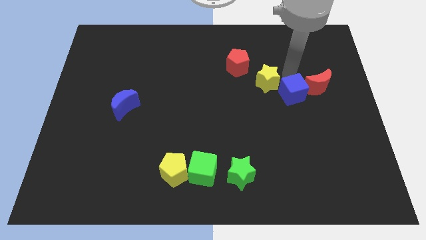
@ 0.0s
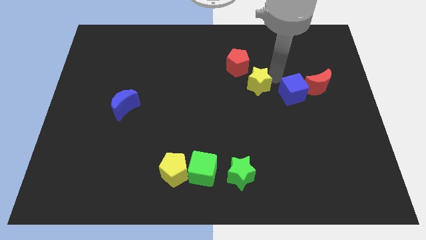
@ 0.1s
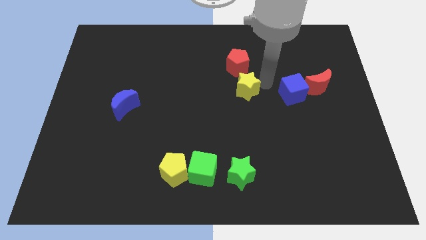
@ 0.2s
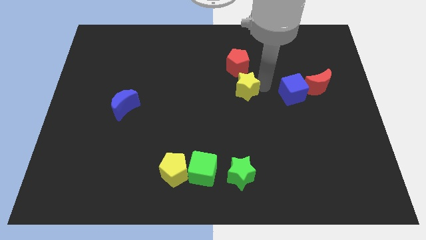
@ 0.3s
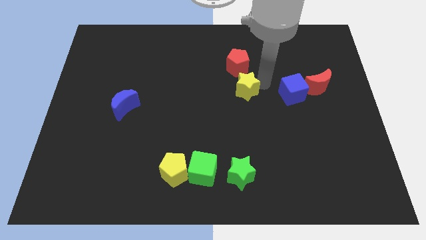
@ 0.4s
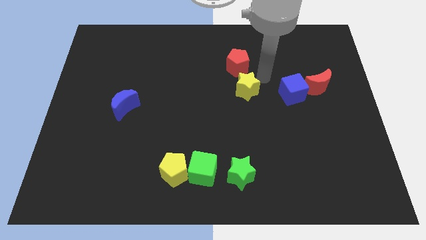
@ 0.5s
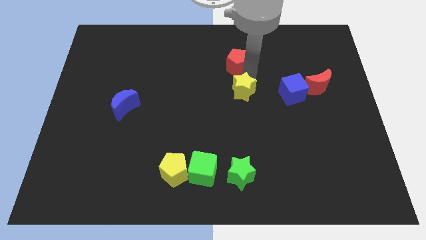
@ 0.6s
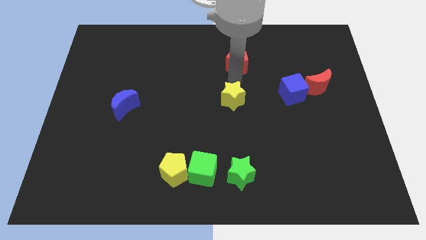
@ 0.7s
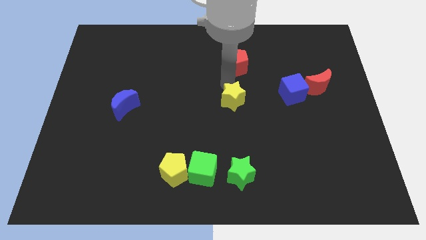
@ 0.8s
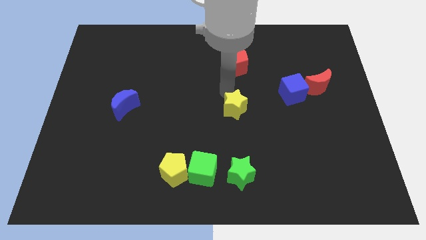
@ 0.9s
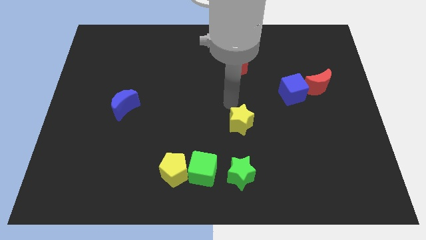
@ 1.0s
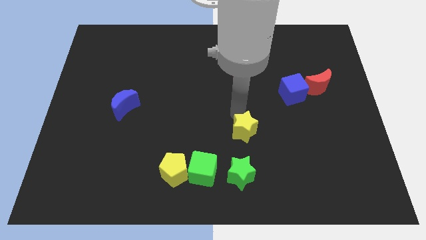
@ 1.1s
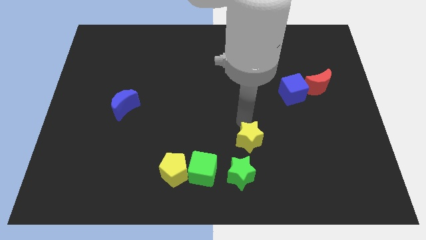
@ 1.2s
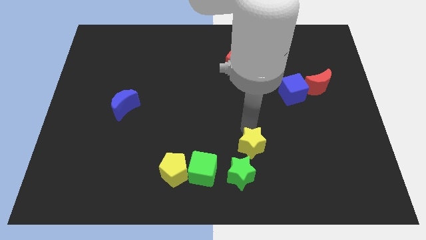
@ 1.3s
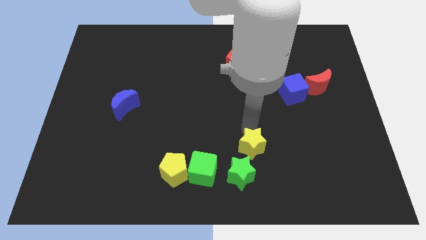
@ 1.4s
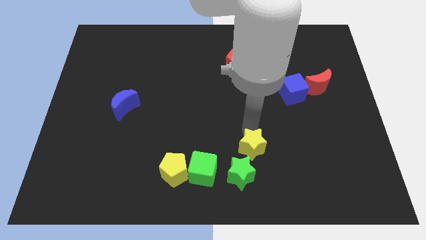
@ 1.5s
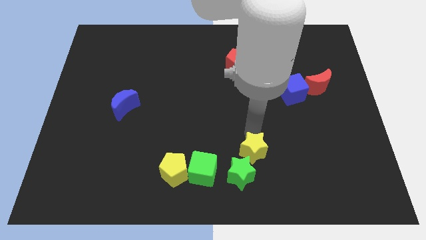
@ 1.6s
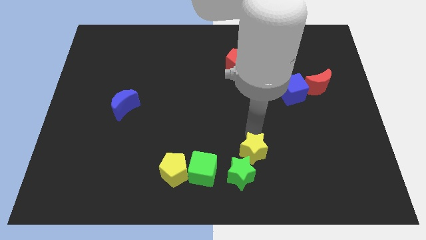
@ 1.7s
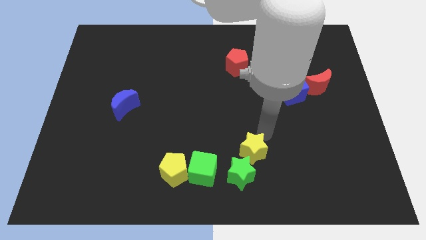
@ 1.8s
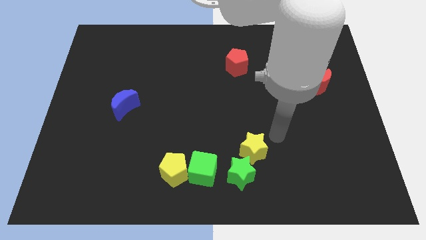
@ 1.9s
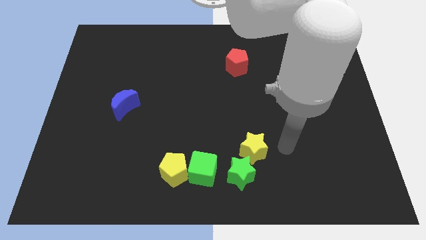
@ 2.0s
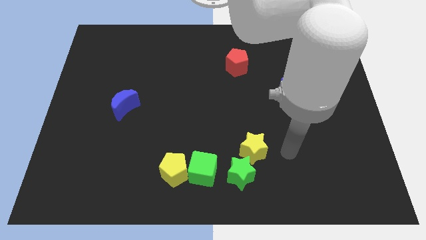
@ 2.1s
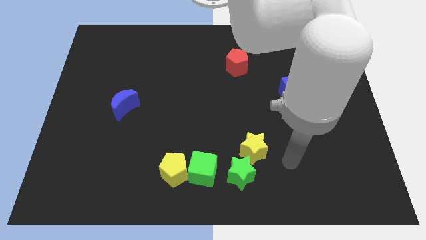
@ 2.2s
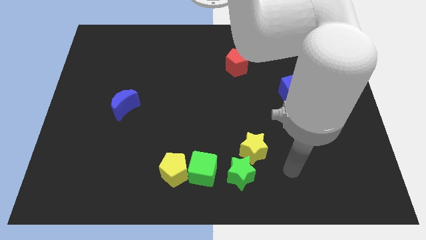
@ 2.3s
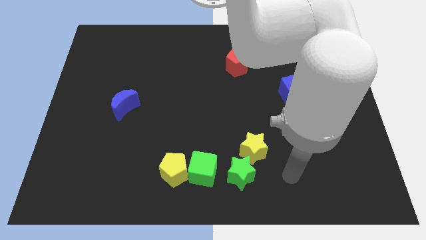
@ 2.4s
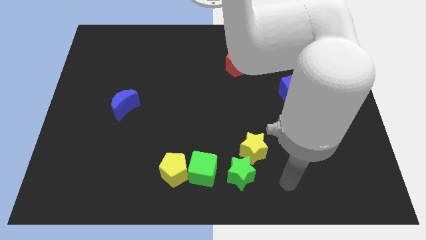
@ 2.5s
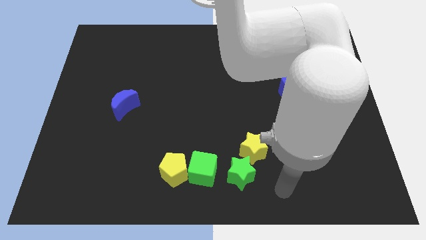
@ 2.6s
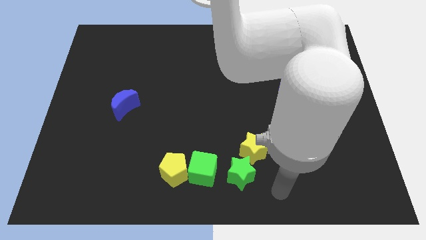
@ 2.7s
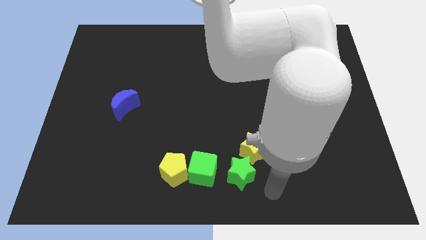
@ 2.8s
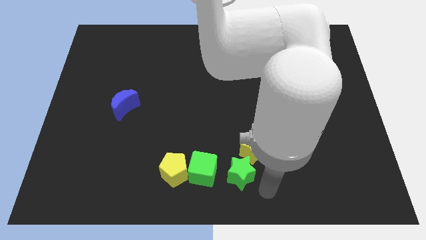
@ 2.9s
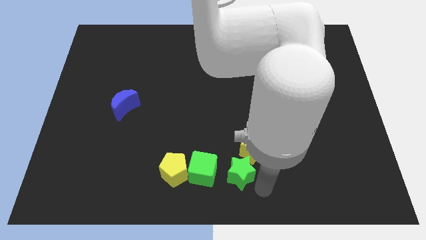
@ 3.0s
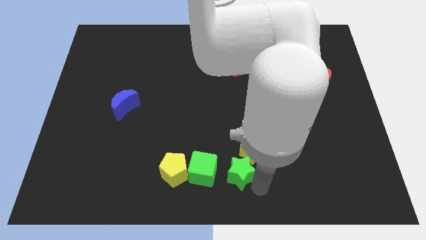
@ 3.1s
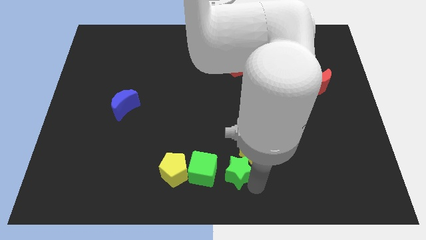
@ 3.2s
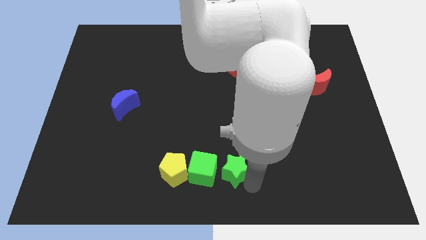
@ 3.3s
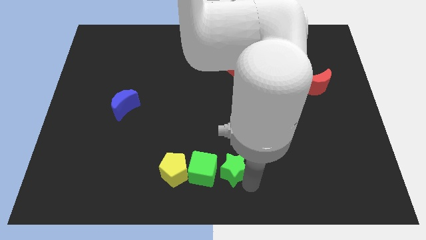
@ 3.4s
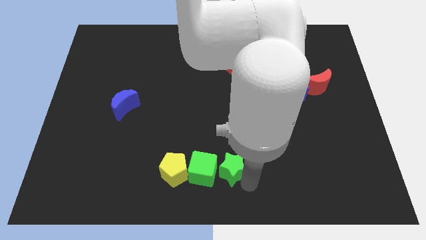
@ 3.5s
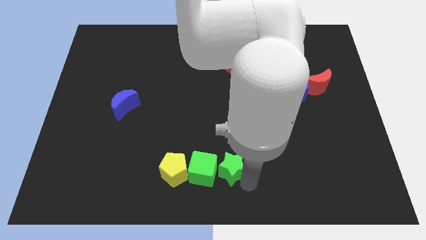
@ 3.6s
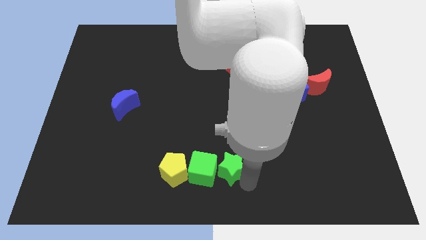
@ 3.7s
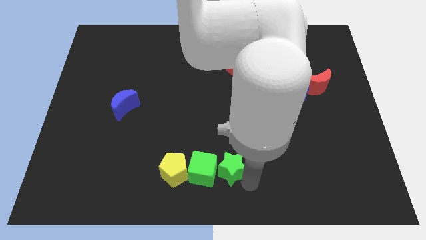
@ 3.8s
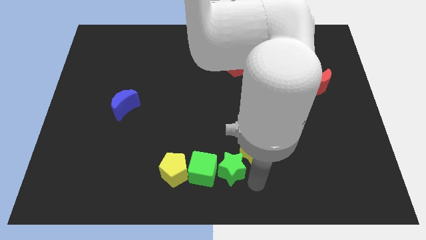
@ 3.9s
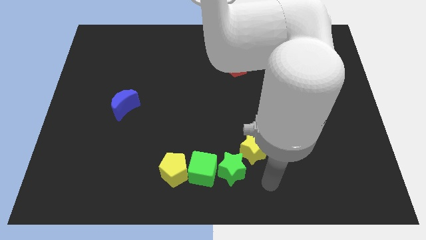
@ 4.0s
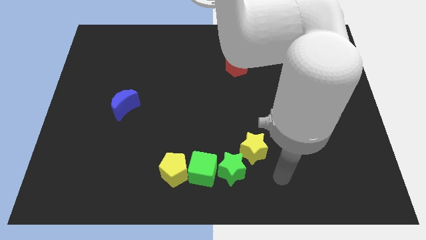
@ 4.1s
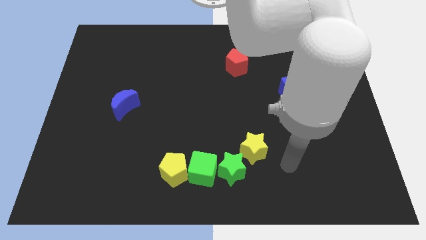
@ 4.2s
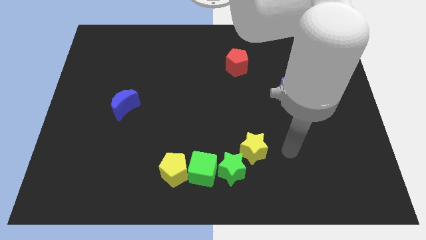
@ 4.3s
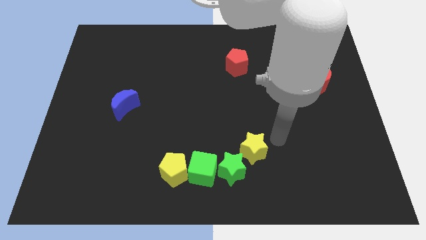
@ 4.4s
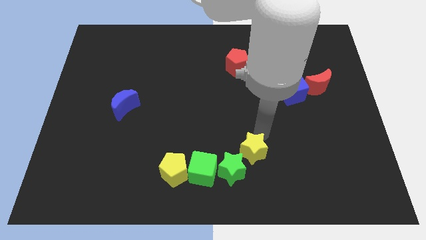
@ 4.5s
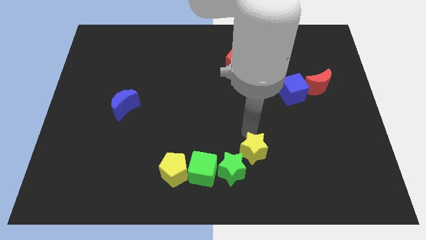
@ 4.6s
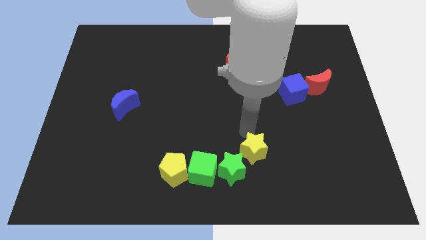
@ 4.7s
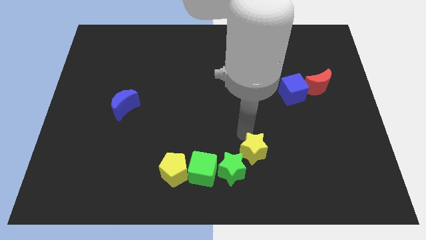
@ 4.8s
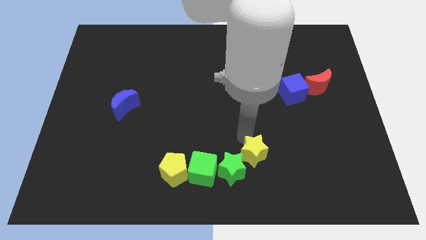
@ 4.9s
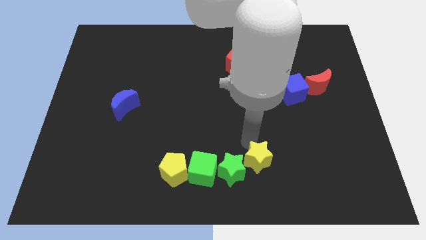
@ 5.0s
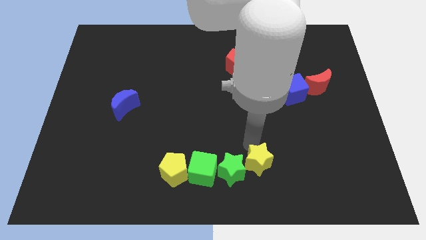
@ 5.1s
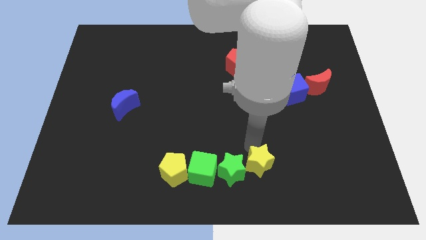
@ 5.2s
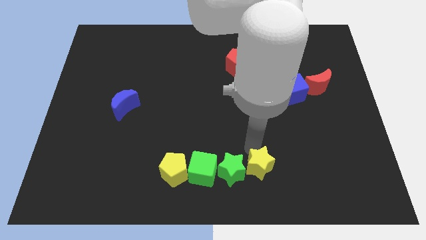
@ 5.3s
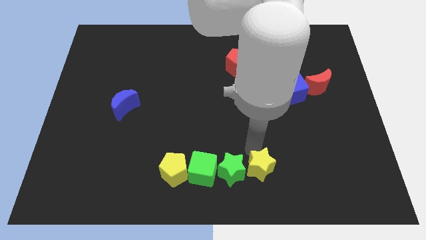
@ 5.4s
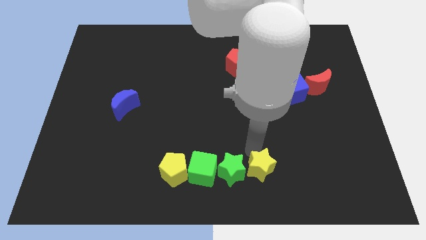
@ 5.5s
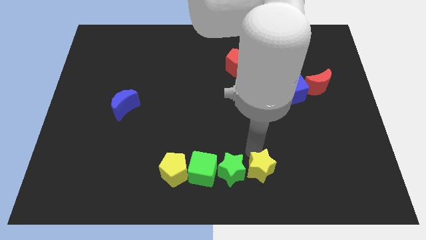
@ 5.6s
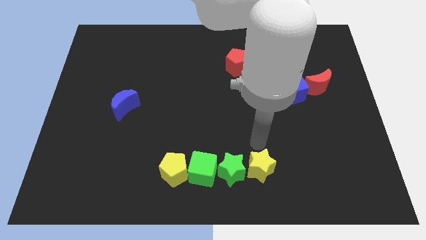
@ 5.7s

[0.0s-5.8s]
place the yellow star right to the green star

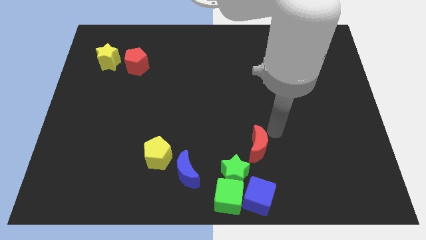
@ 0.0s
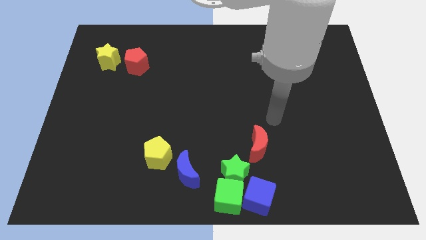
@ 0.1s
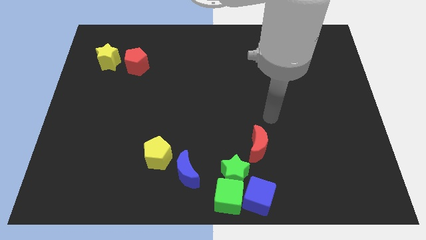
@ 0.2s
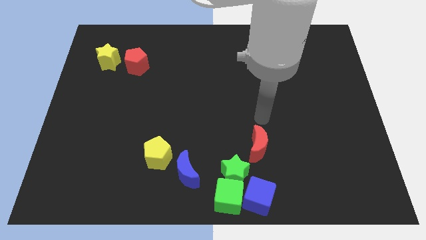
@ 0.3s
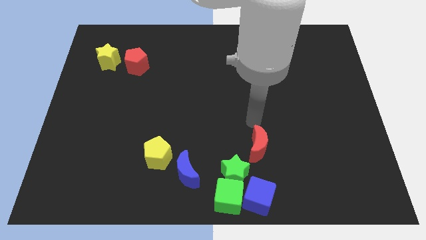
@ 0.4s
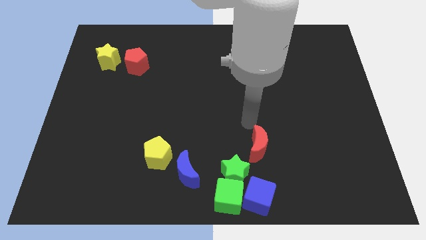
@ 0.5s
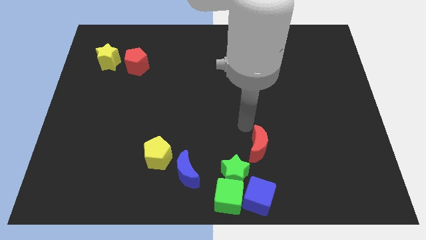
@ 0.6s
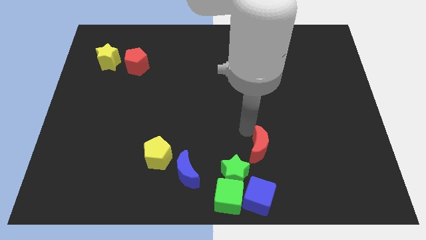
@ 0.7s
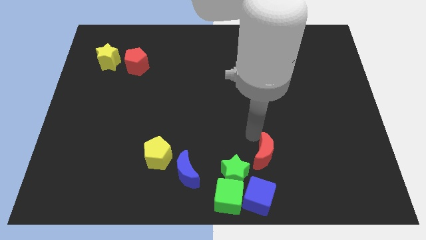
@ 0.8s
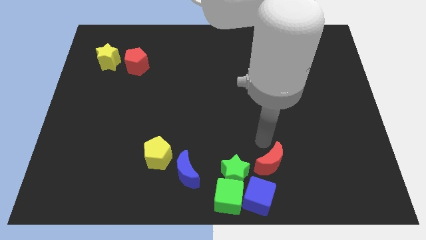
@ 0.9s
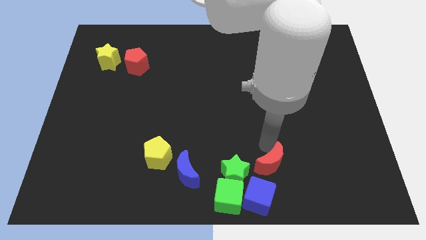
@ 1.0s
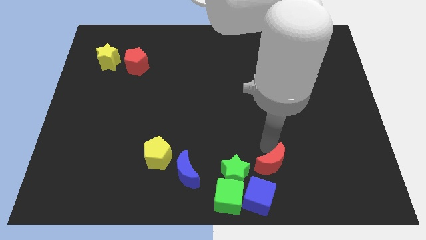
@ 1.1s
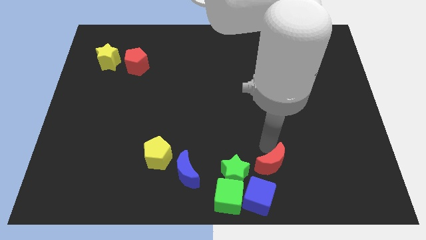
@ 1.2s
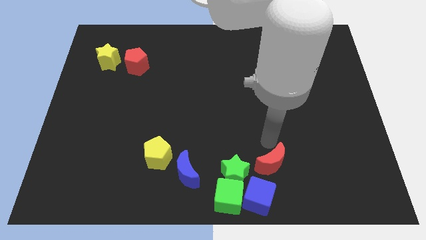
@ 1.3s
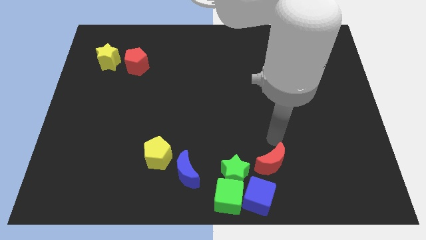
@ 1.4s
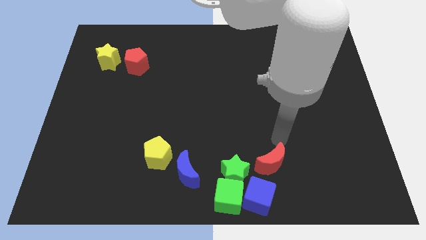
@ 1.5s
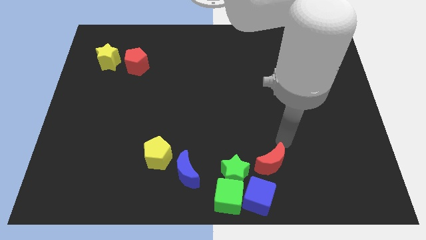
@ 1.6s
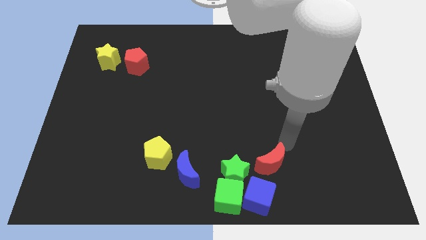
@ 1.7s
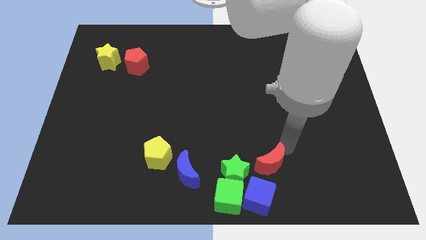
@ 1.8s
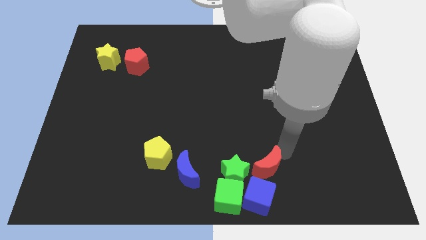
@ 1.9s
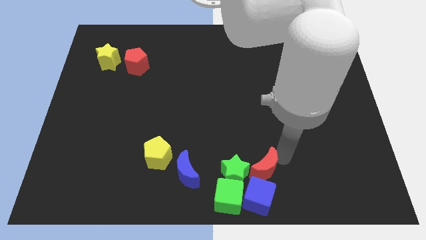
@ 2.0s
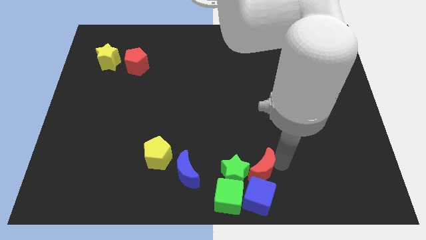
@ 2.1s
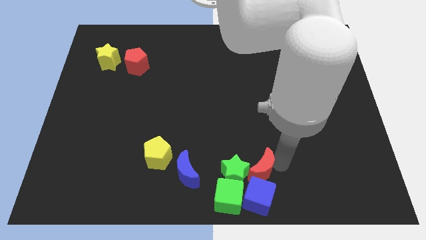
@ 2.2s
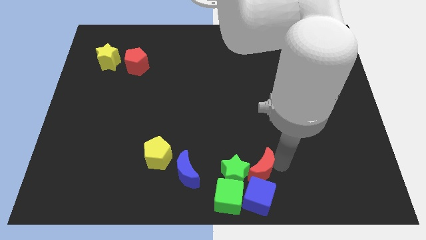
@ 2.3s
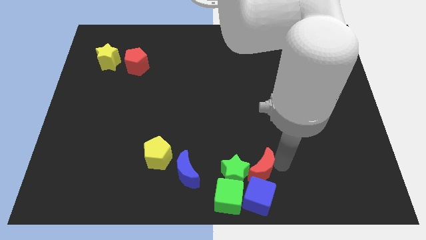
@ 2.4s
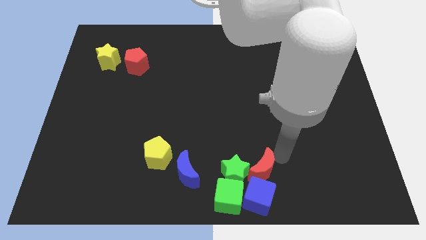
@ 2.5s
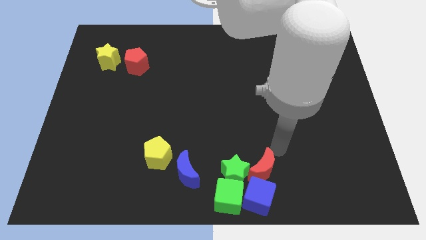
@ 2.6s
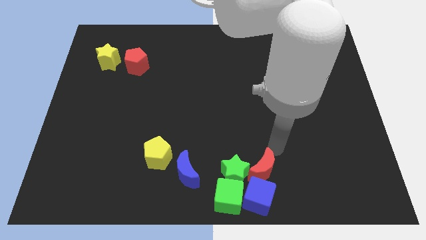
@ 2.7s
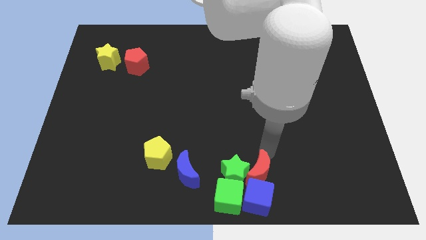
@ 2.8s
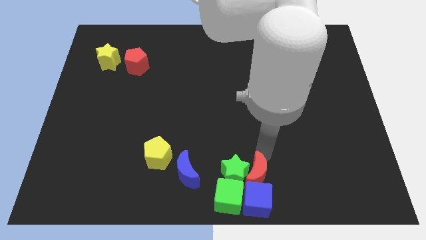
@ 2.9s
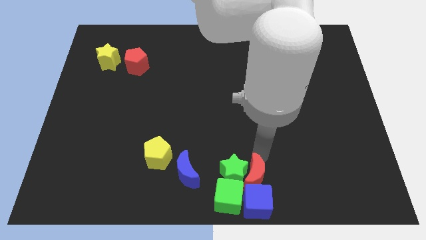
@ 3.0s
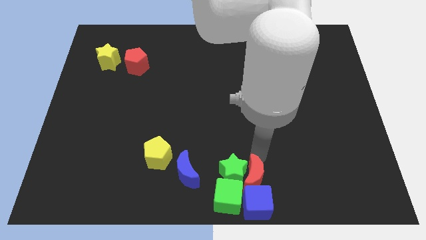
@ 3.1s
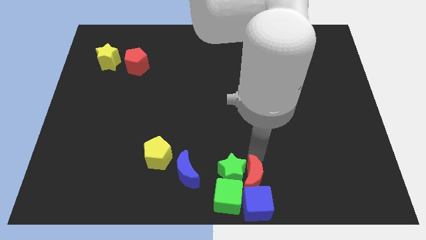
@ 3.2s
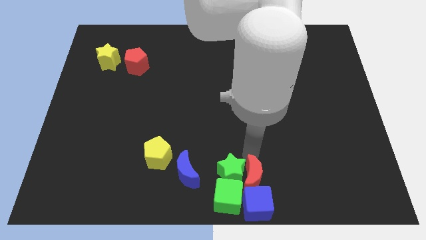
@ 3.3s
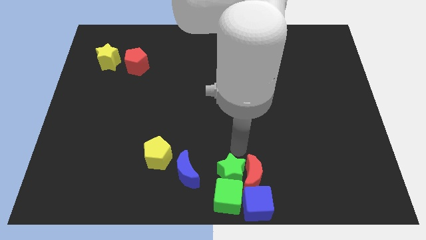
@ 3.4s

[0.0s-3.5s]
put the red crescent at the top of the blue cube
